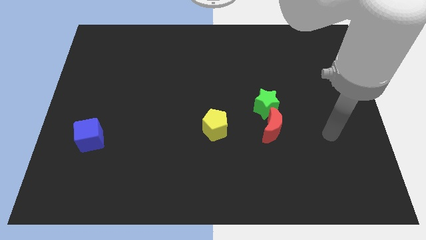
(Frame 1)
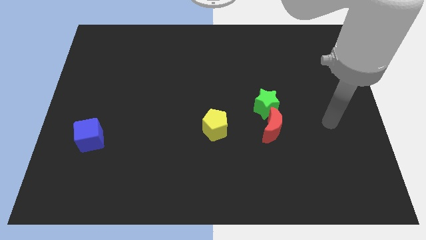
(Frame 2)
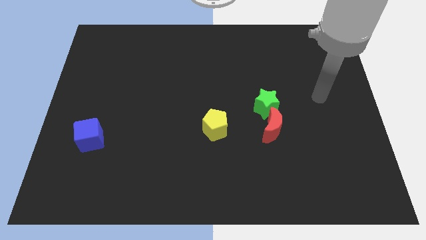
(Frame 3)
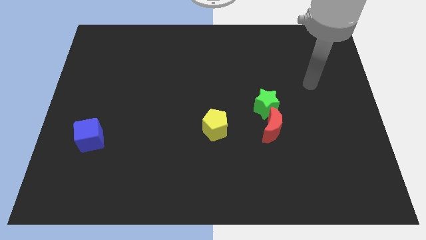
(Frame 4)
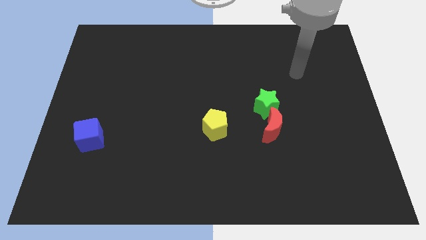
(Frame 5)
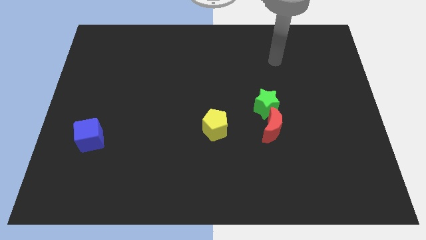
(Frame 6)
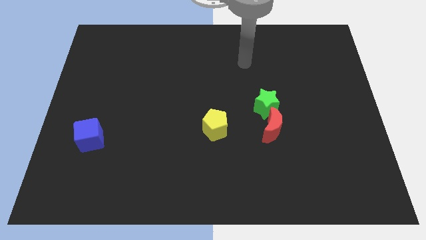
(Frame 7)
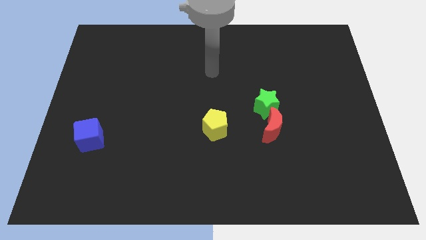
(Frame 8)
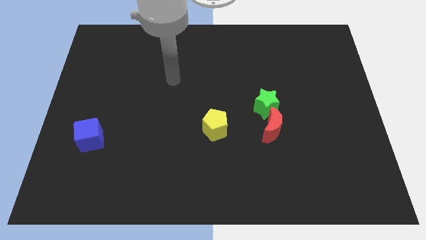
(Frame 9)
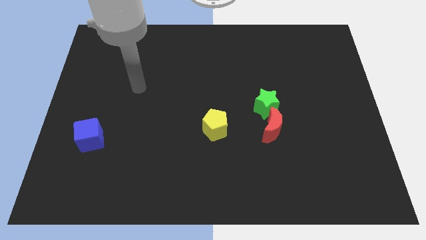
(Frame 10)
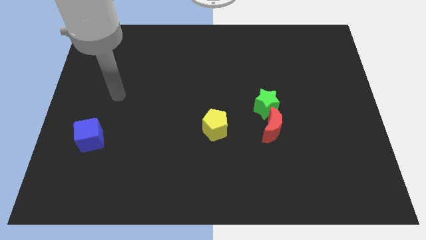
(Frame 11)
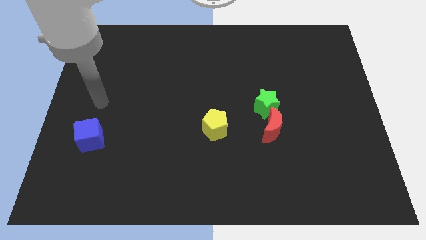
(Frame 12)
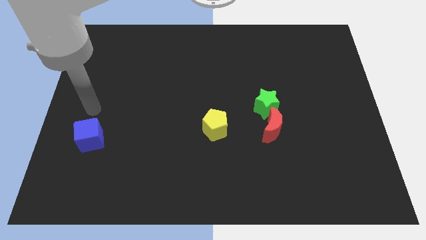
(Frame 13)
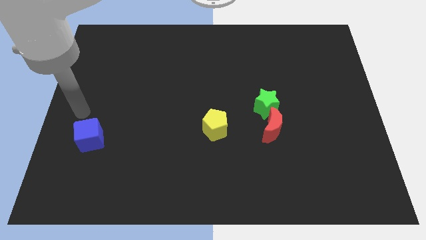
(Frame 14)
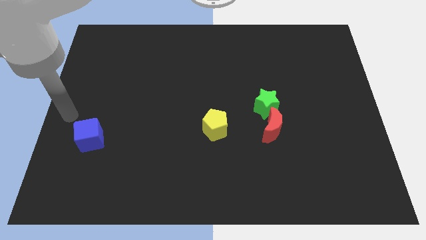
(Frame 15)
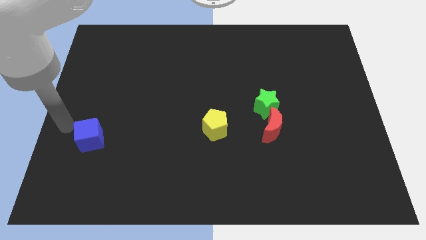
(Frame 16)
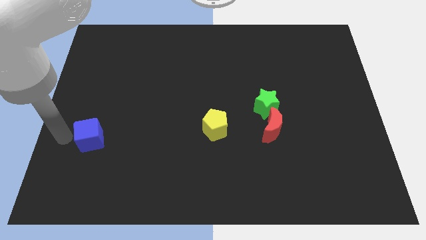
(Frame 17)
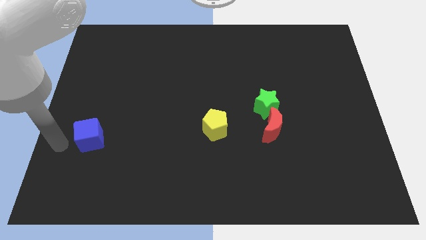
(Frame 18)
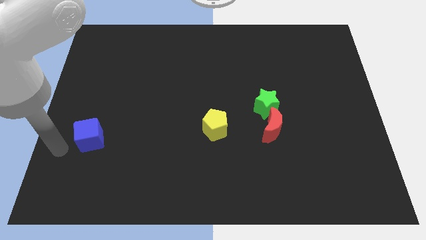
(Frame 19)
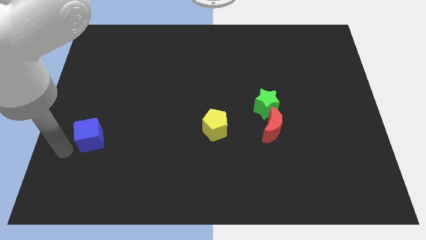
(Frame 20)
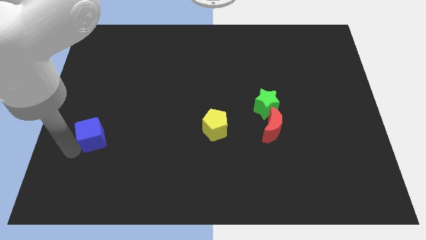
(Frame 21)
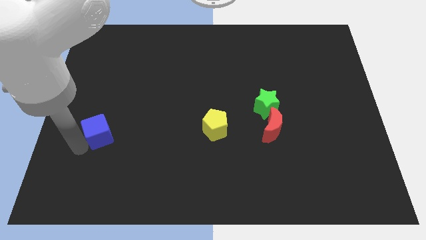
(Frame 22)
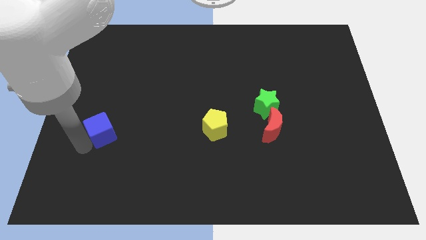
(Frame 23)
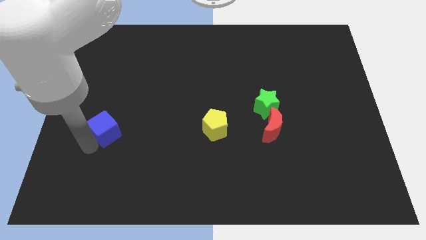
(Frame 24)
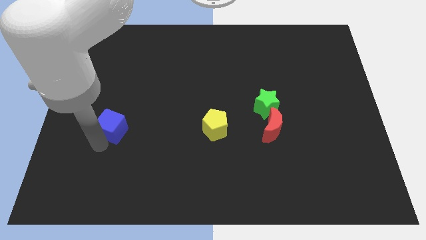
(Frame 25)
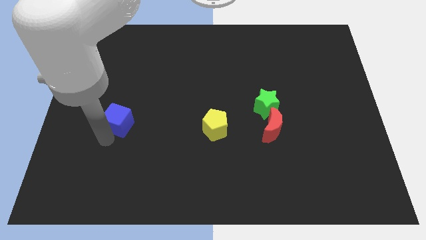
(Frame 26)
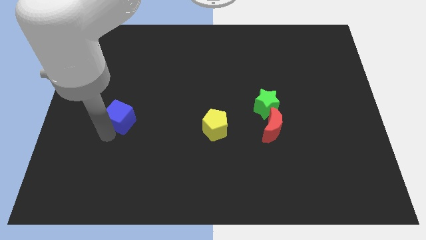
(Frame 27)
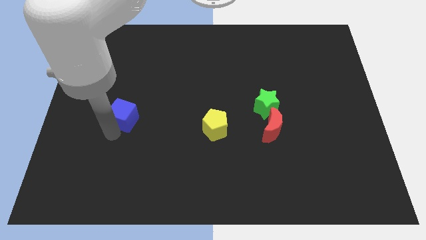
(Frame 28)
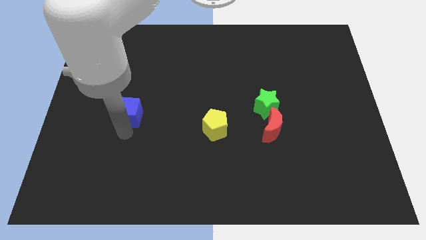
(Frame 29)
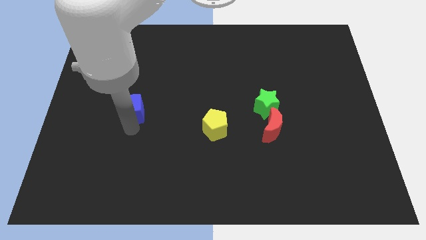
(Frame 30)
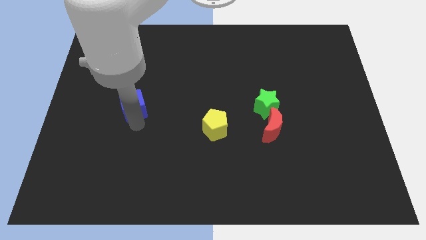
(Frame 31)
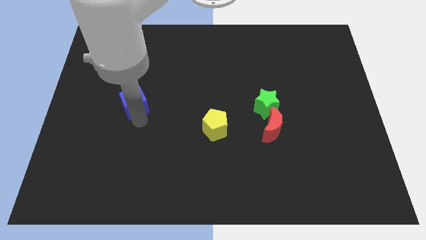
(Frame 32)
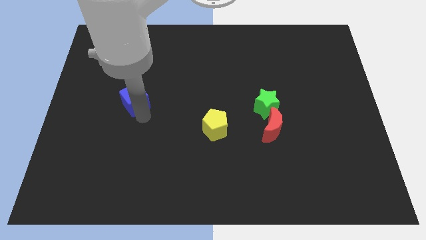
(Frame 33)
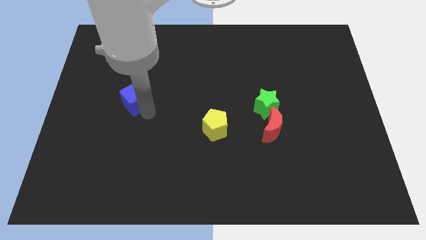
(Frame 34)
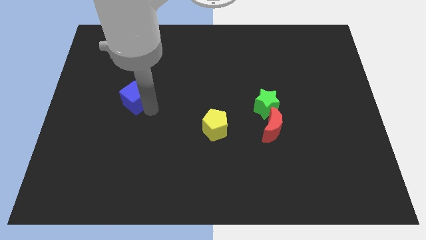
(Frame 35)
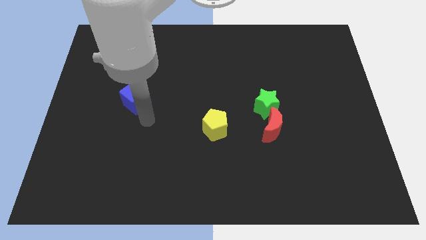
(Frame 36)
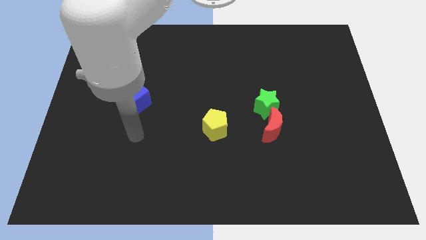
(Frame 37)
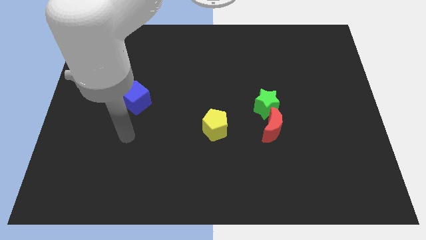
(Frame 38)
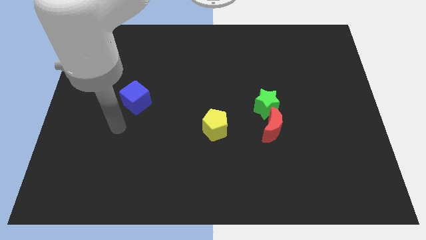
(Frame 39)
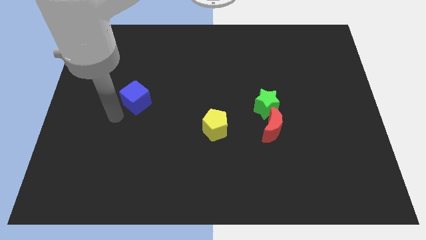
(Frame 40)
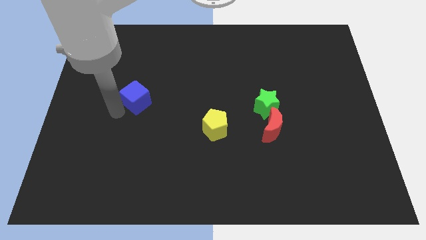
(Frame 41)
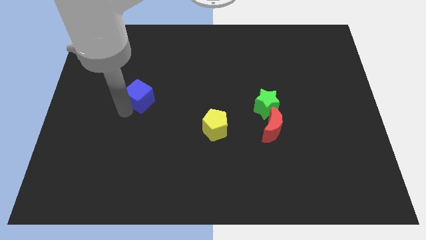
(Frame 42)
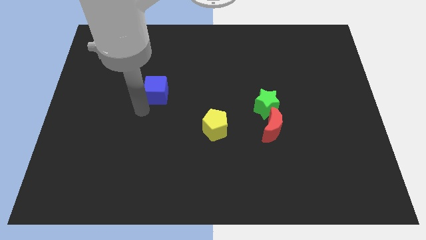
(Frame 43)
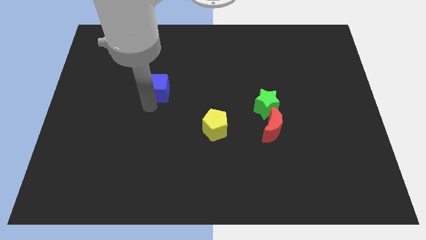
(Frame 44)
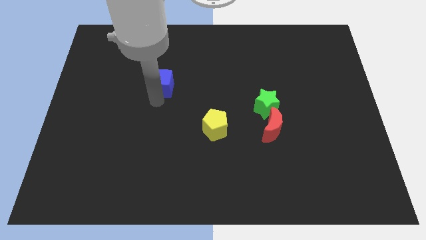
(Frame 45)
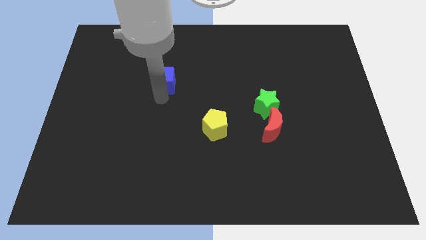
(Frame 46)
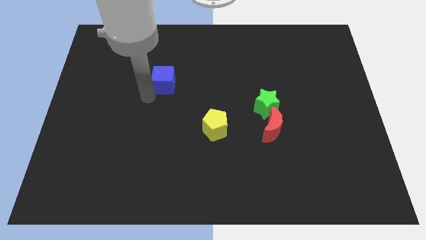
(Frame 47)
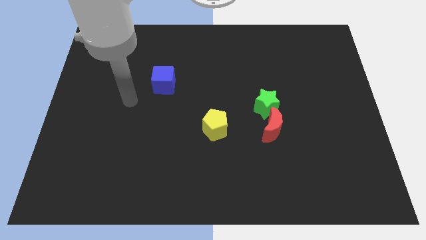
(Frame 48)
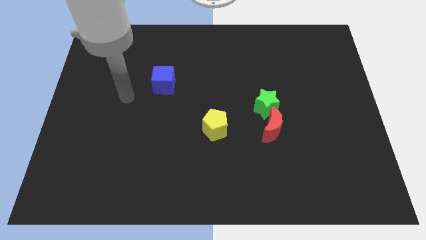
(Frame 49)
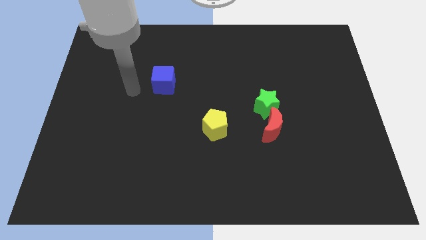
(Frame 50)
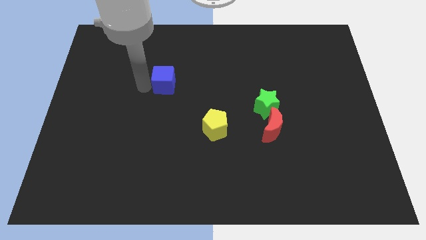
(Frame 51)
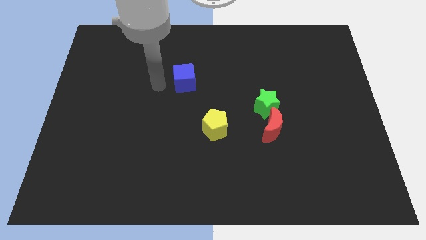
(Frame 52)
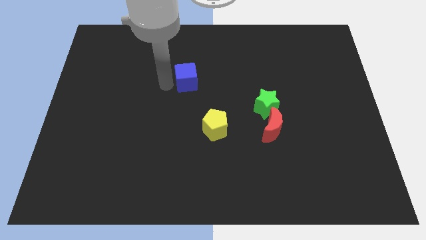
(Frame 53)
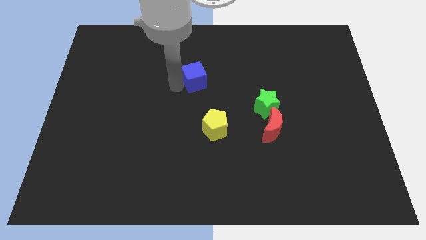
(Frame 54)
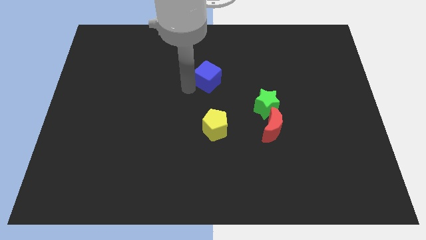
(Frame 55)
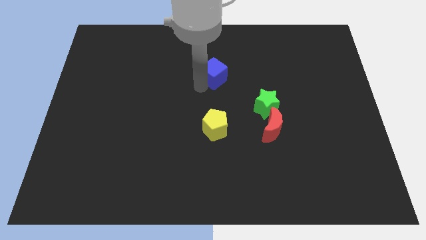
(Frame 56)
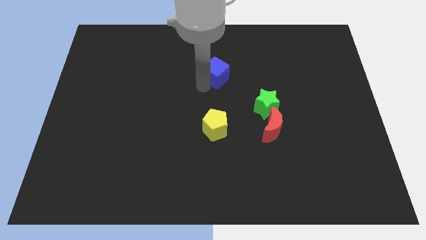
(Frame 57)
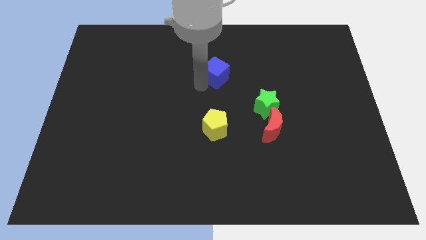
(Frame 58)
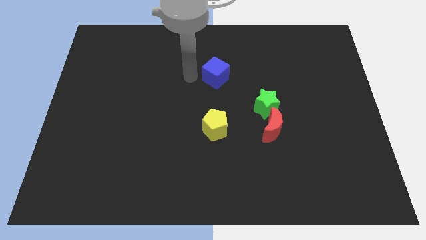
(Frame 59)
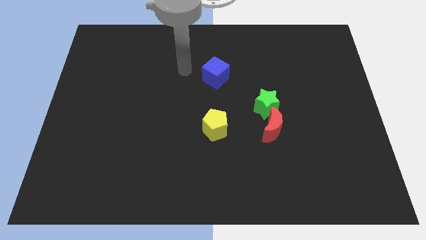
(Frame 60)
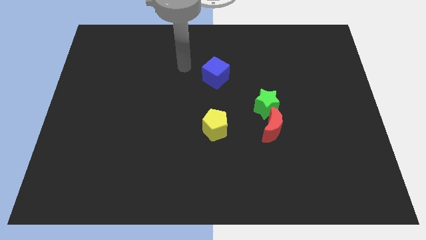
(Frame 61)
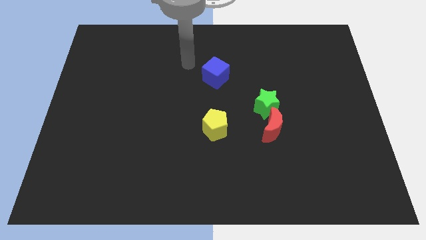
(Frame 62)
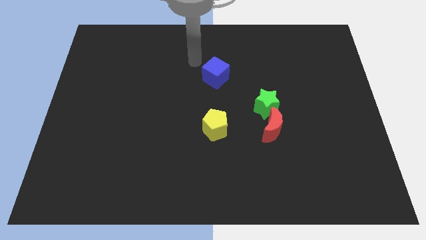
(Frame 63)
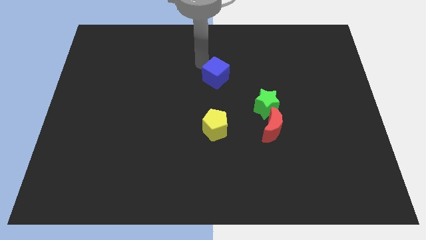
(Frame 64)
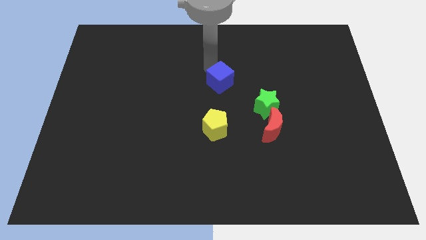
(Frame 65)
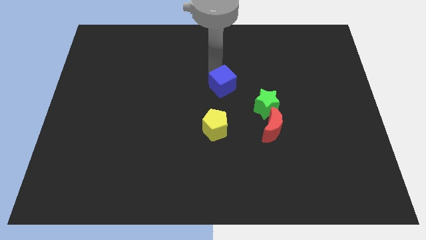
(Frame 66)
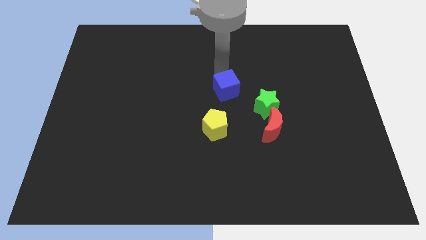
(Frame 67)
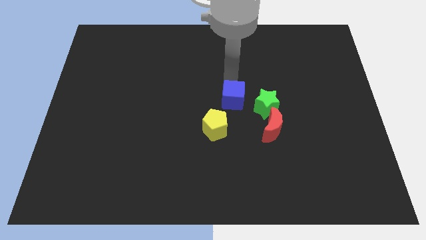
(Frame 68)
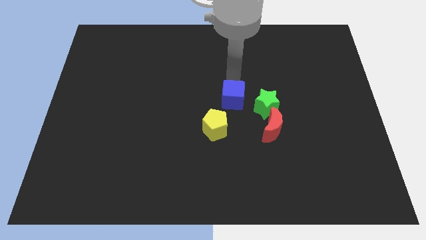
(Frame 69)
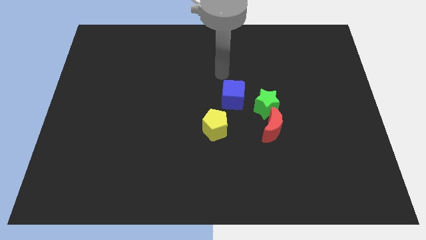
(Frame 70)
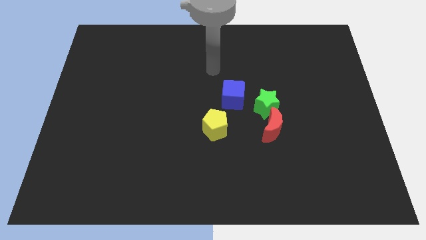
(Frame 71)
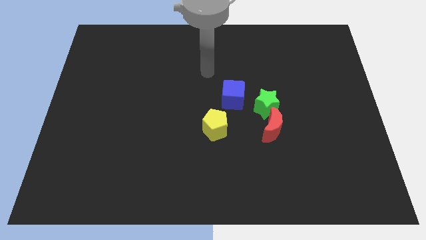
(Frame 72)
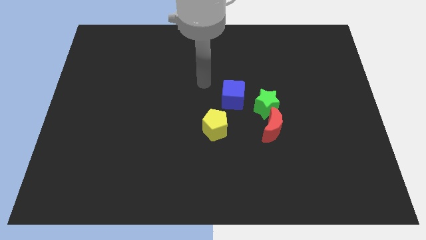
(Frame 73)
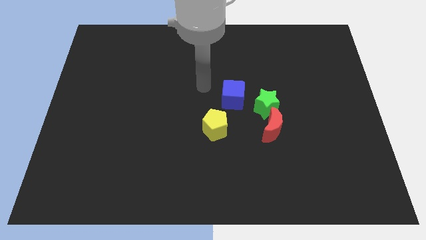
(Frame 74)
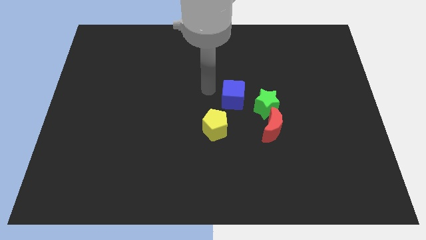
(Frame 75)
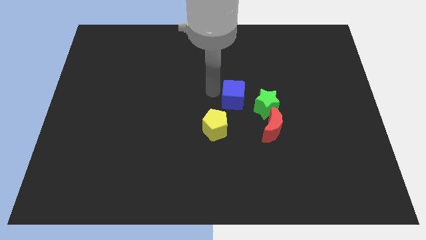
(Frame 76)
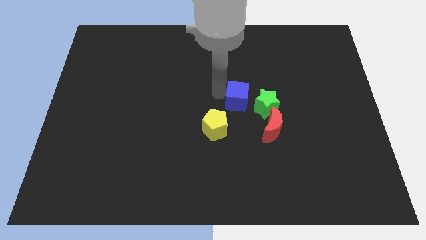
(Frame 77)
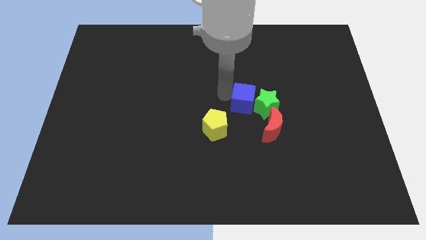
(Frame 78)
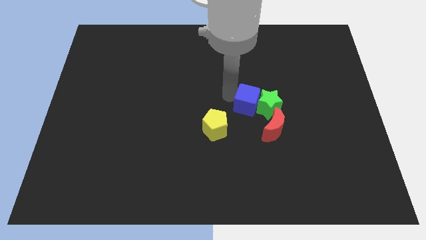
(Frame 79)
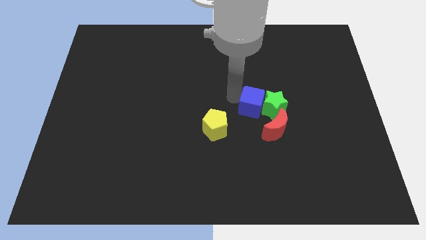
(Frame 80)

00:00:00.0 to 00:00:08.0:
put the cube towards the green star

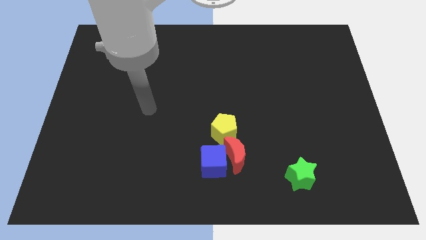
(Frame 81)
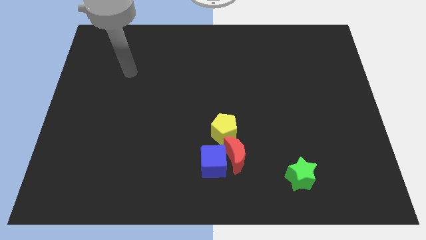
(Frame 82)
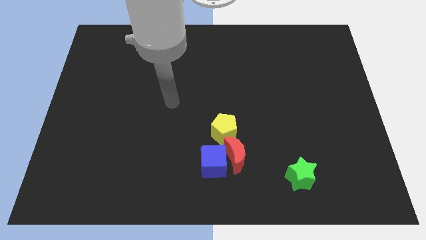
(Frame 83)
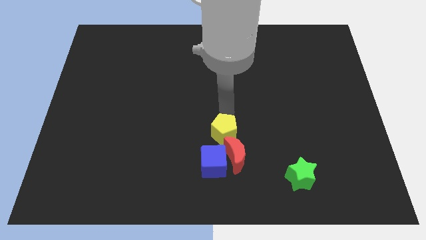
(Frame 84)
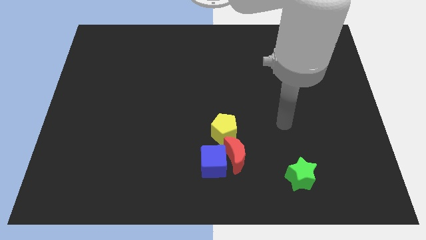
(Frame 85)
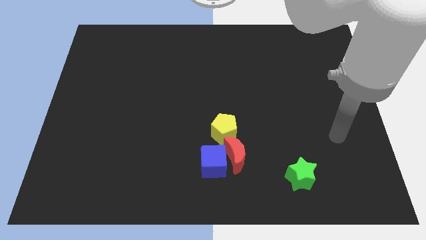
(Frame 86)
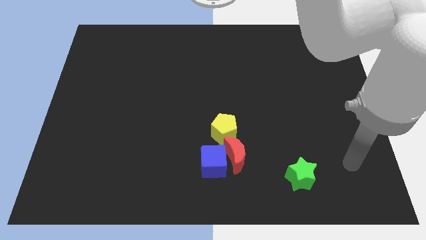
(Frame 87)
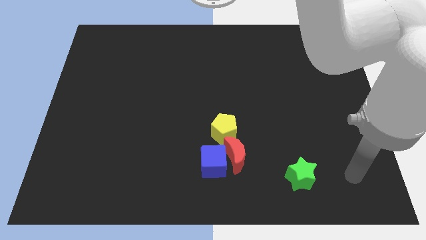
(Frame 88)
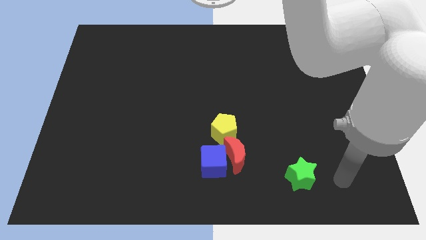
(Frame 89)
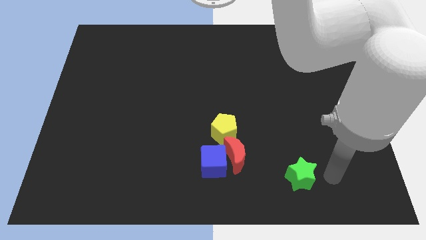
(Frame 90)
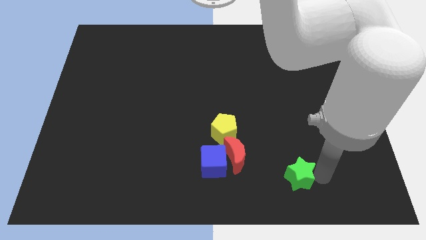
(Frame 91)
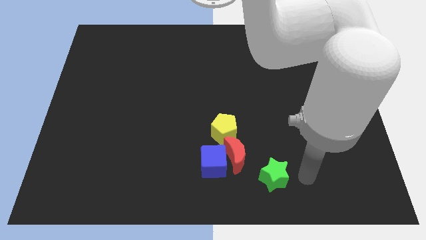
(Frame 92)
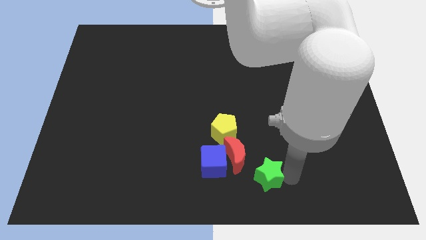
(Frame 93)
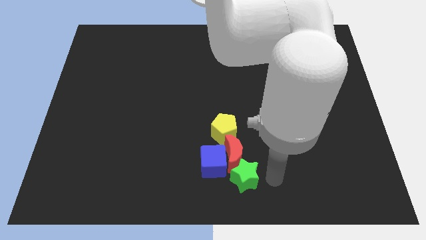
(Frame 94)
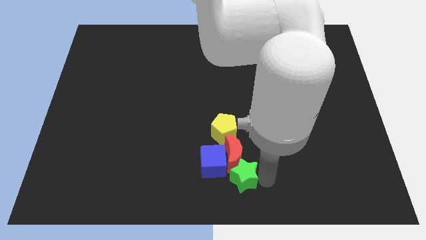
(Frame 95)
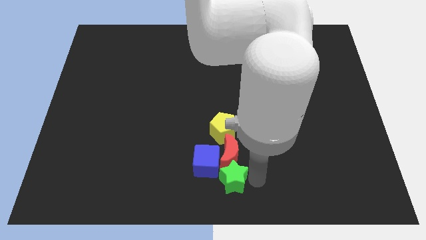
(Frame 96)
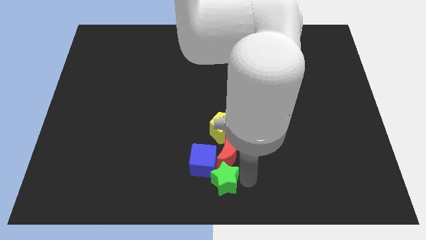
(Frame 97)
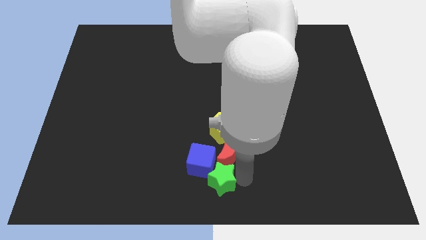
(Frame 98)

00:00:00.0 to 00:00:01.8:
put the green star close to the cube
